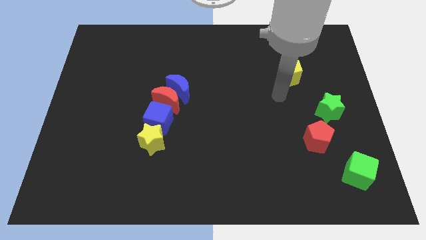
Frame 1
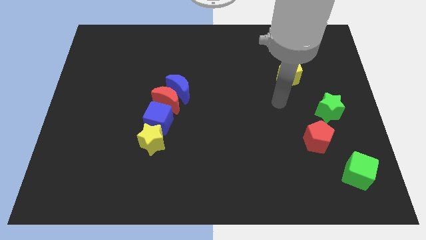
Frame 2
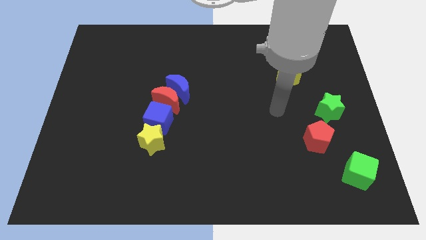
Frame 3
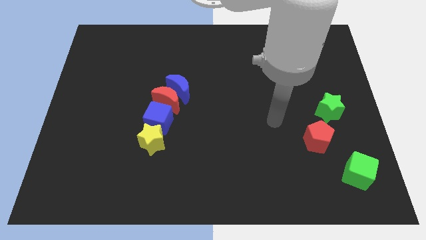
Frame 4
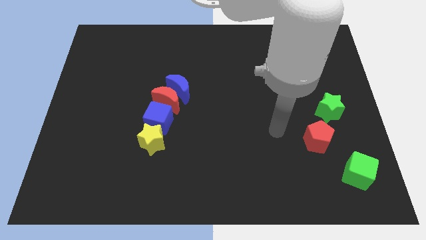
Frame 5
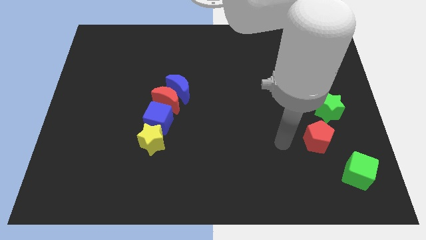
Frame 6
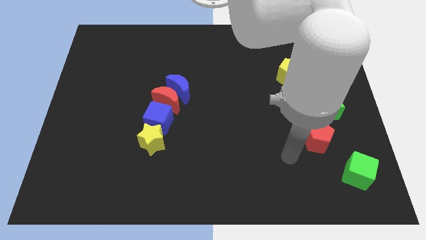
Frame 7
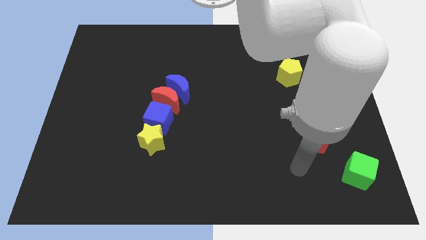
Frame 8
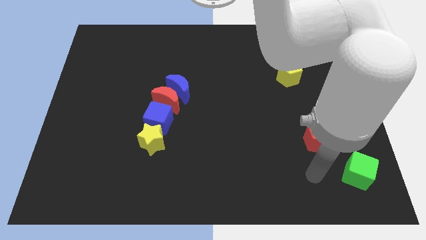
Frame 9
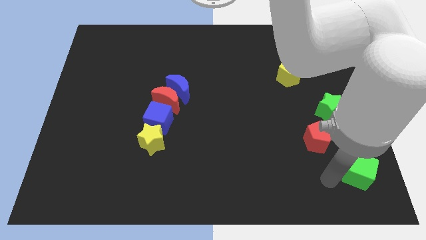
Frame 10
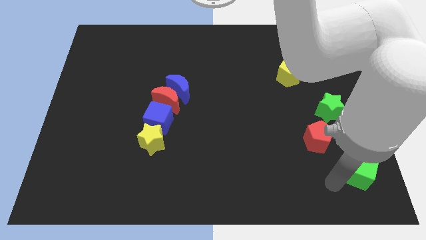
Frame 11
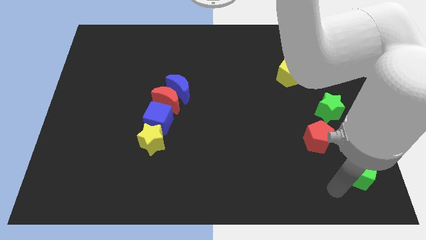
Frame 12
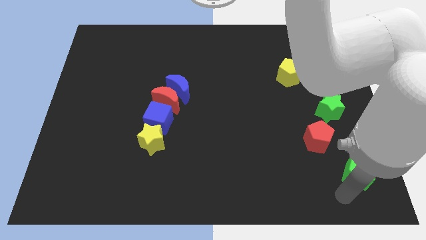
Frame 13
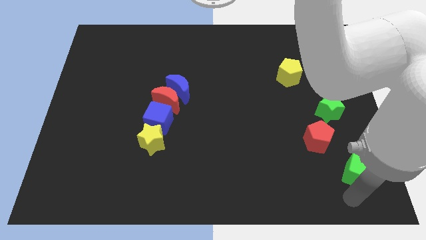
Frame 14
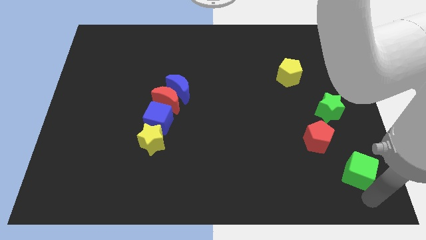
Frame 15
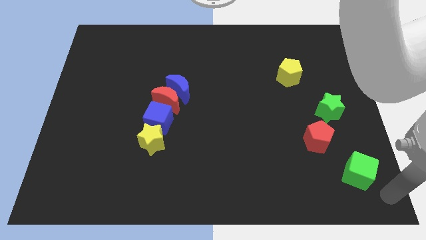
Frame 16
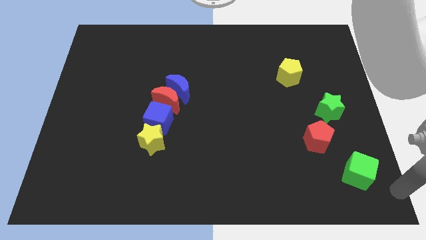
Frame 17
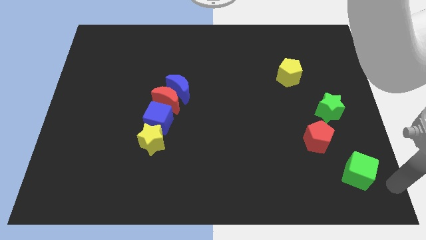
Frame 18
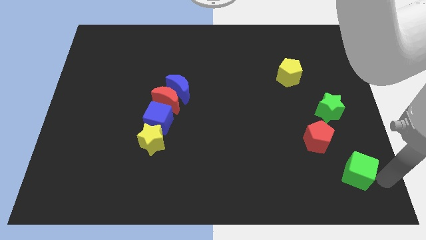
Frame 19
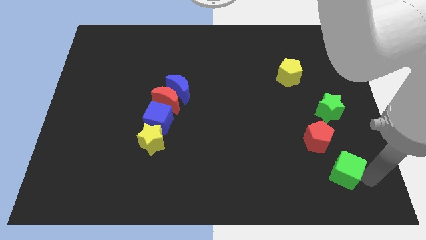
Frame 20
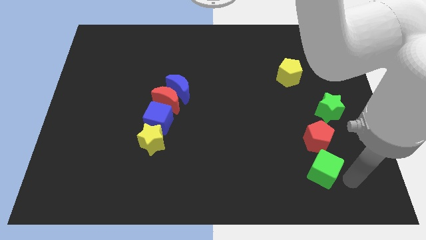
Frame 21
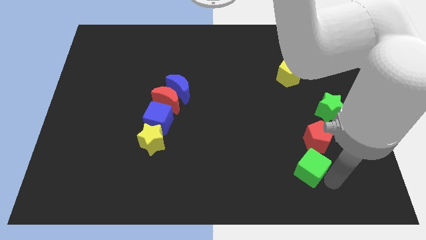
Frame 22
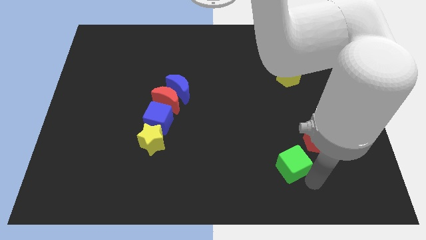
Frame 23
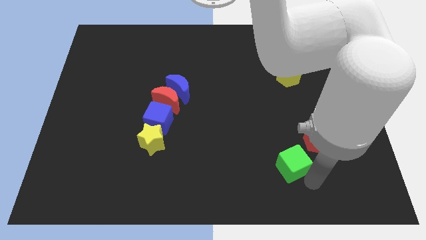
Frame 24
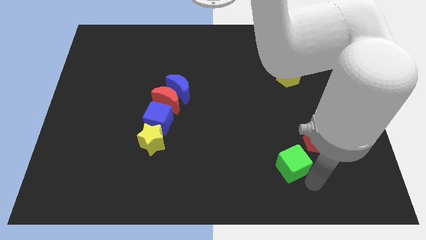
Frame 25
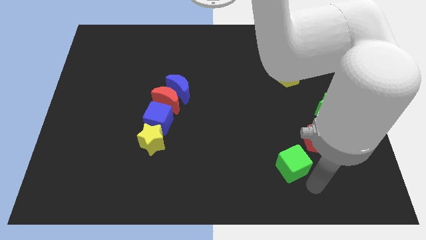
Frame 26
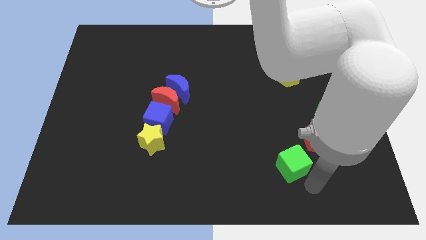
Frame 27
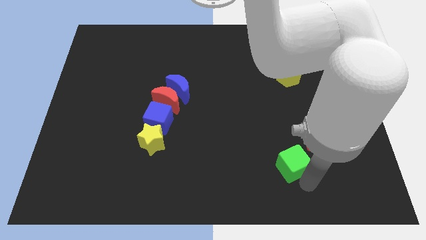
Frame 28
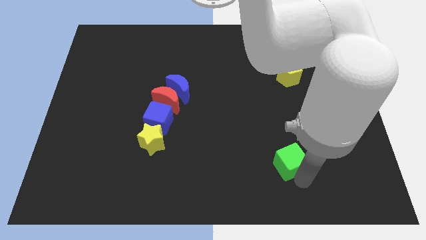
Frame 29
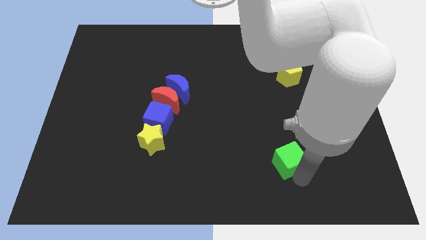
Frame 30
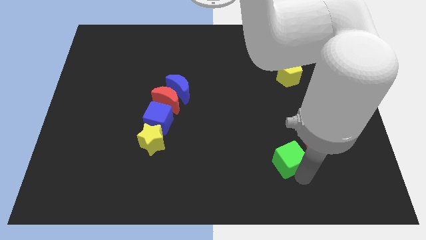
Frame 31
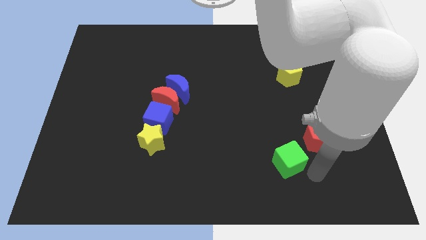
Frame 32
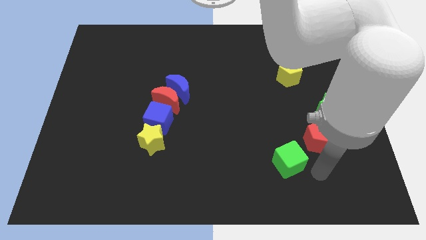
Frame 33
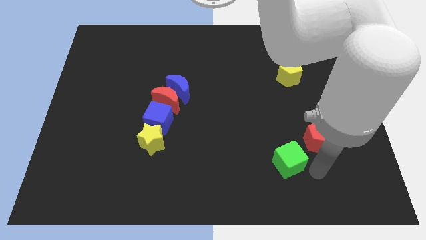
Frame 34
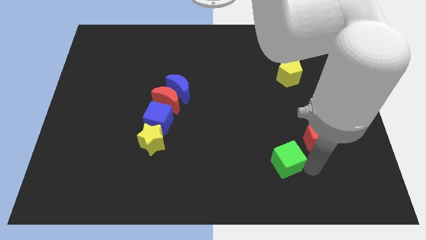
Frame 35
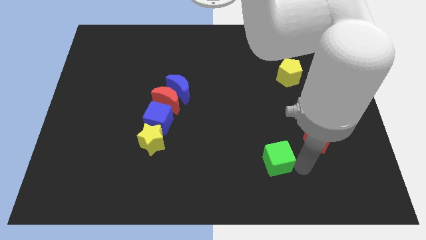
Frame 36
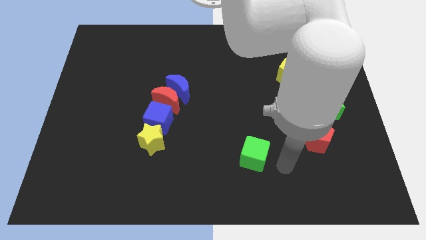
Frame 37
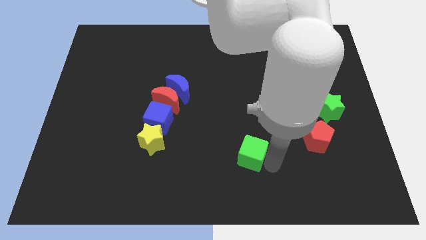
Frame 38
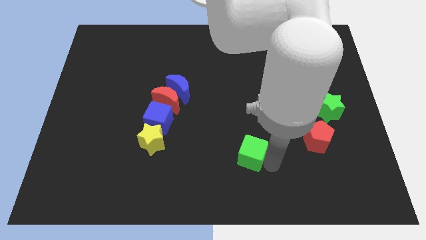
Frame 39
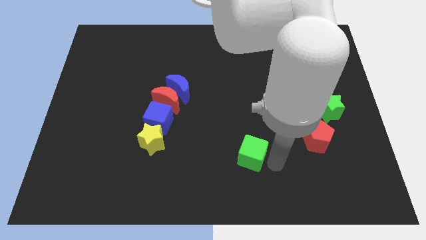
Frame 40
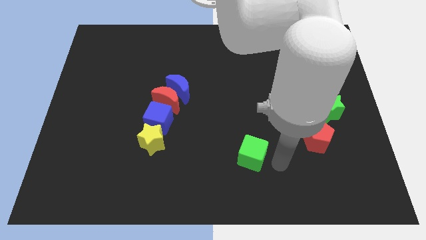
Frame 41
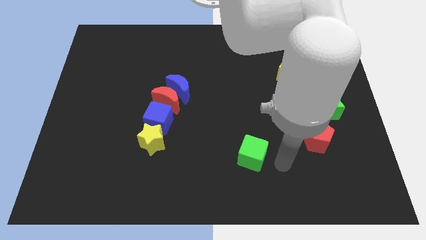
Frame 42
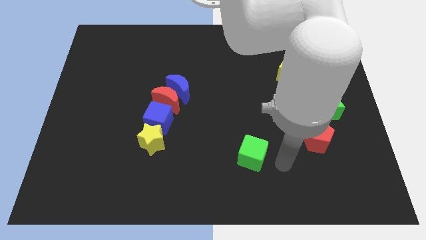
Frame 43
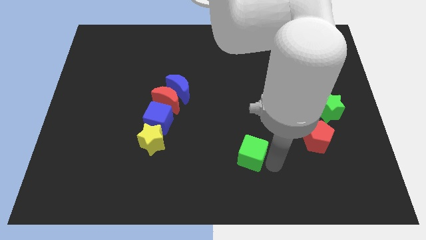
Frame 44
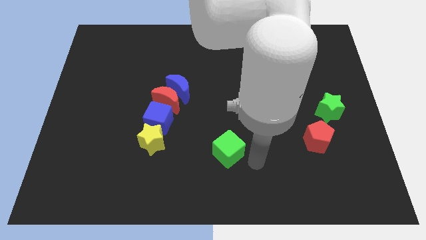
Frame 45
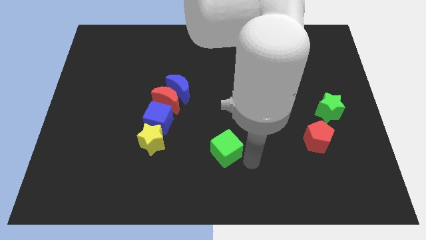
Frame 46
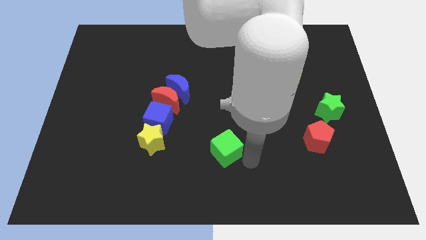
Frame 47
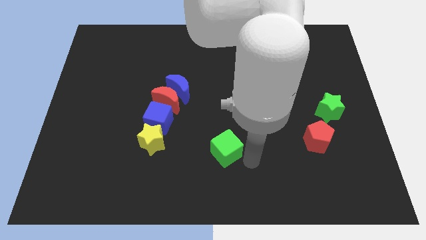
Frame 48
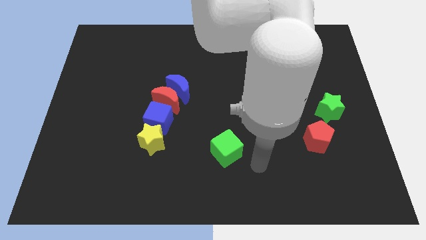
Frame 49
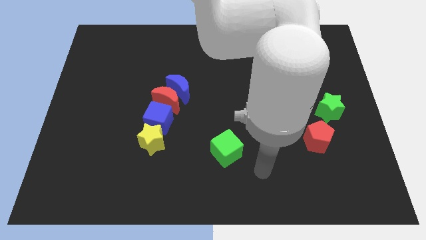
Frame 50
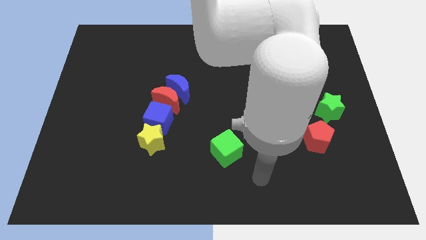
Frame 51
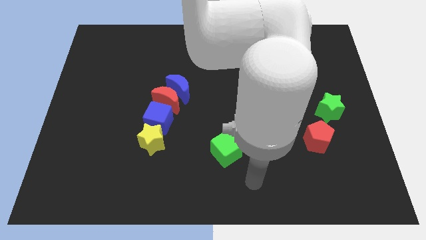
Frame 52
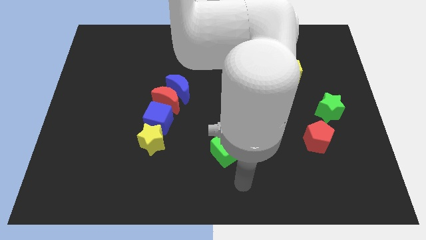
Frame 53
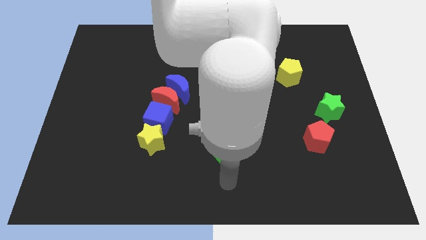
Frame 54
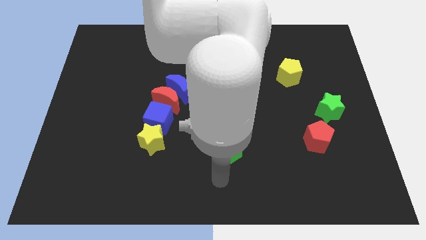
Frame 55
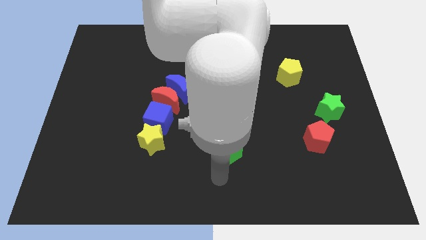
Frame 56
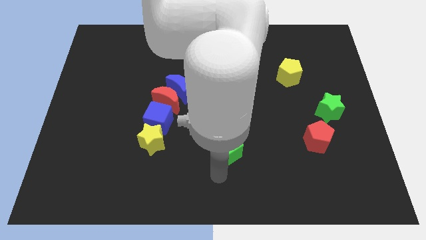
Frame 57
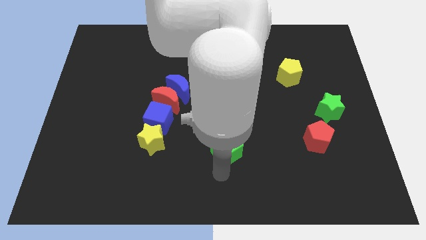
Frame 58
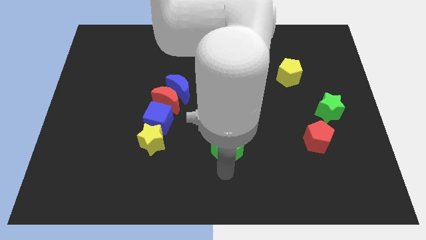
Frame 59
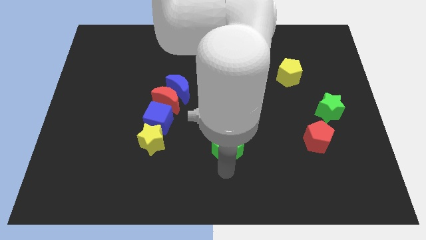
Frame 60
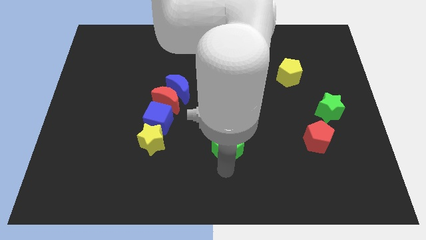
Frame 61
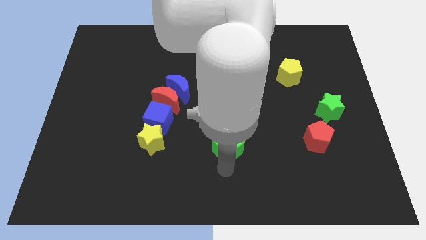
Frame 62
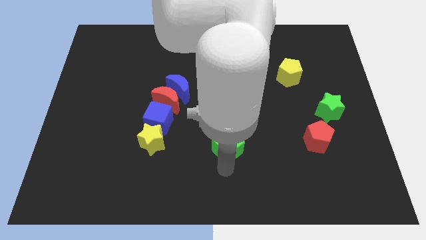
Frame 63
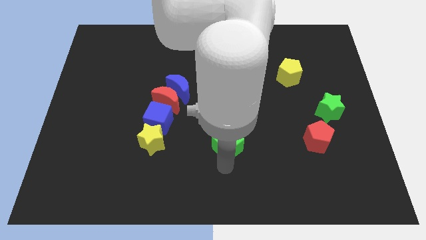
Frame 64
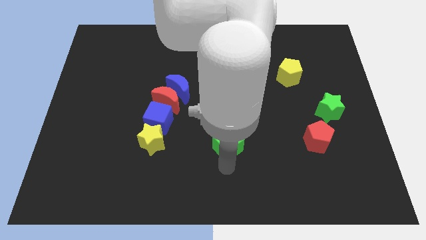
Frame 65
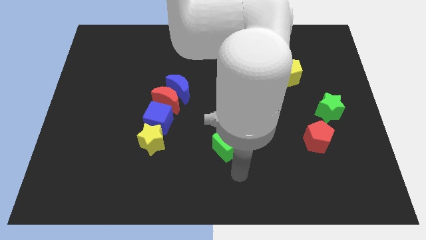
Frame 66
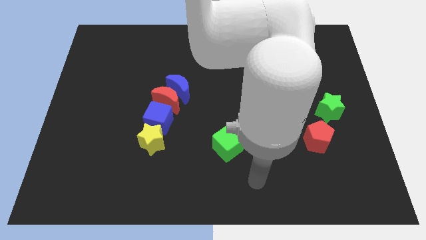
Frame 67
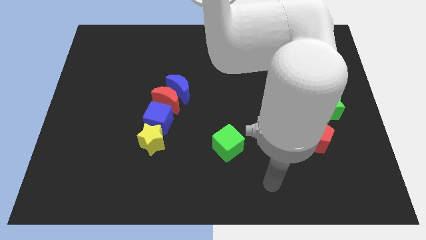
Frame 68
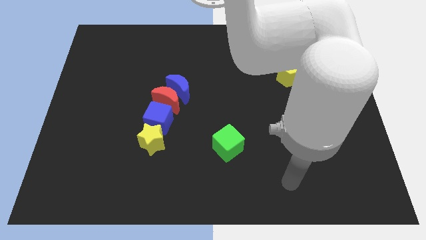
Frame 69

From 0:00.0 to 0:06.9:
push the green cube towards the top left

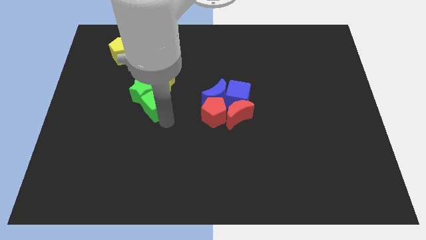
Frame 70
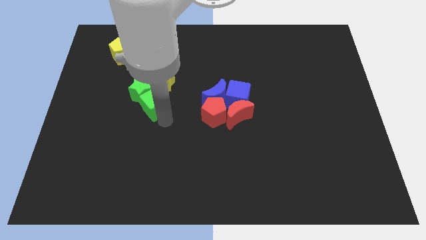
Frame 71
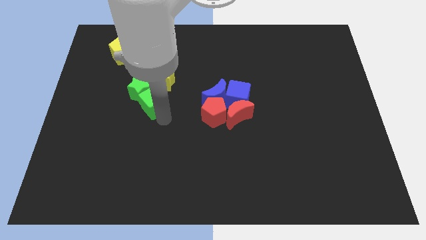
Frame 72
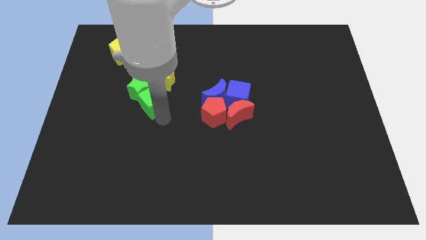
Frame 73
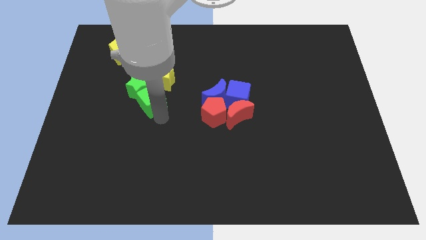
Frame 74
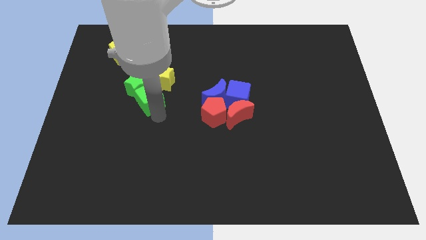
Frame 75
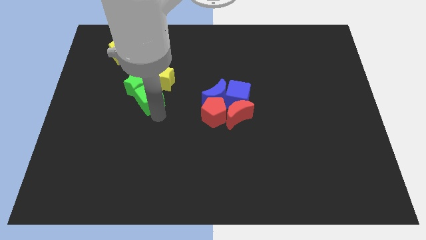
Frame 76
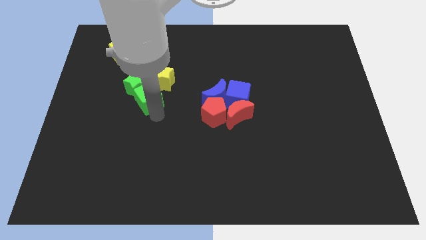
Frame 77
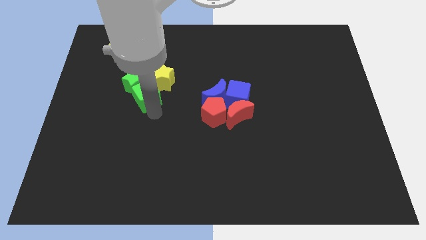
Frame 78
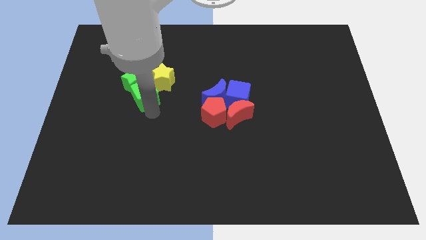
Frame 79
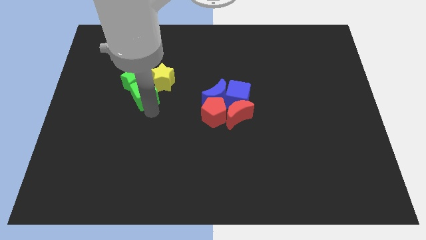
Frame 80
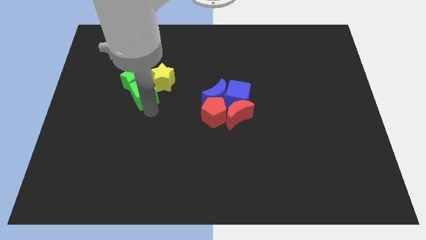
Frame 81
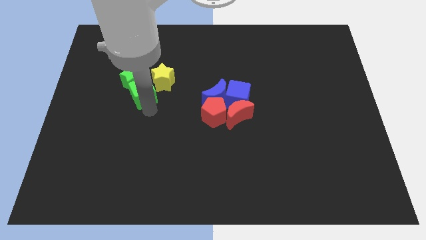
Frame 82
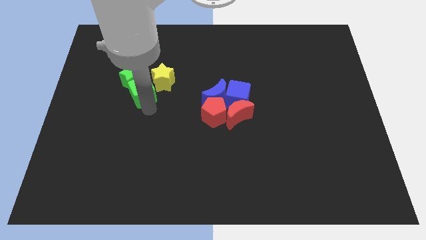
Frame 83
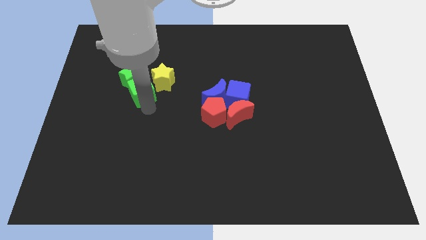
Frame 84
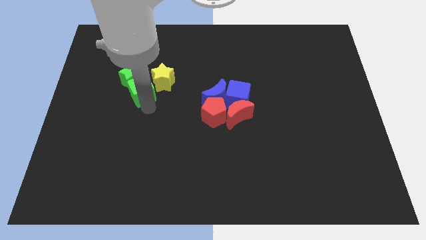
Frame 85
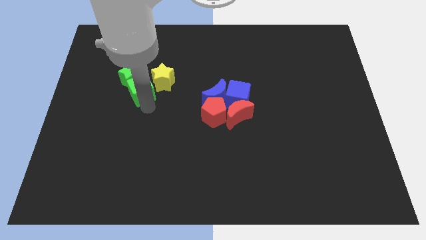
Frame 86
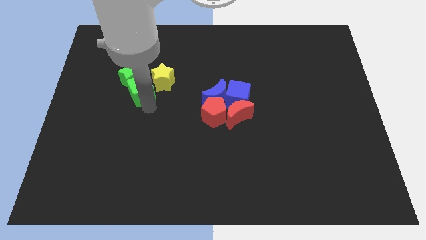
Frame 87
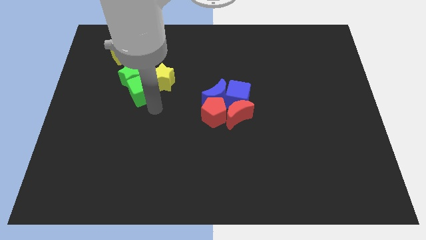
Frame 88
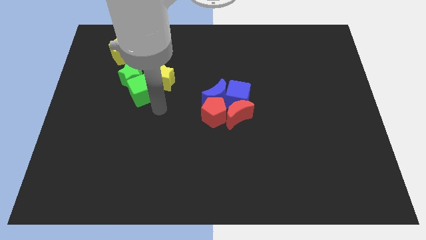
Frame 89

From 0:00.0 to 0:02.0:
move both the green blocks to the left side of the yellow star
